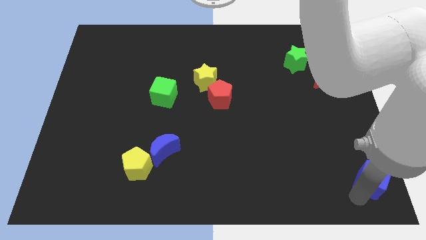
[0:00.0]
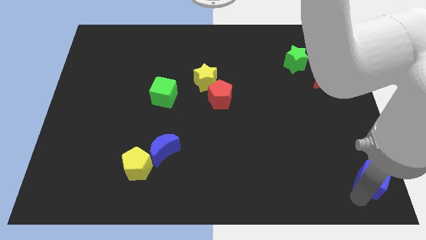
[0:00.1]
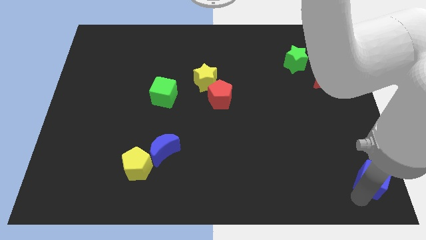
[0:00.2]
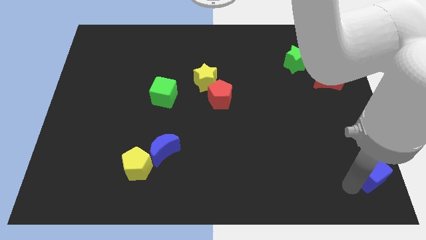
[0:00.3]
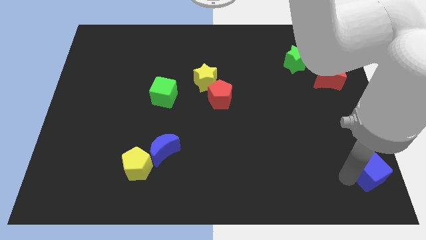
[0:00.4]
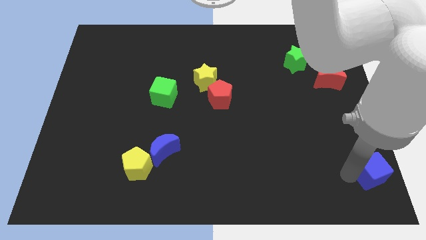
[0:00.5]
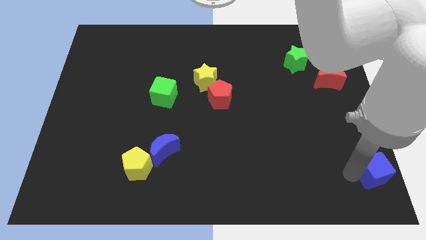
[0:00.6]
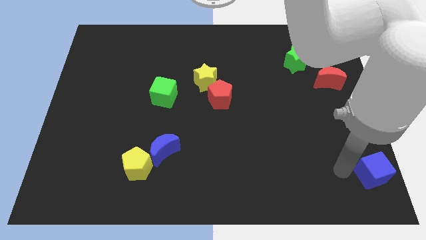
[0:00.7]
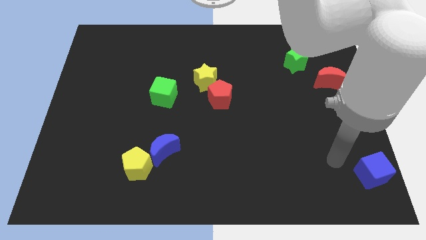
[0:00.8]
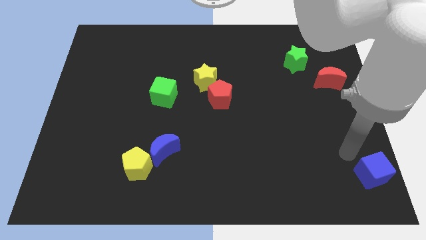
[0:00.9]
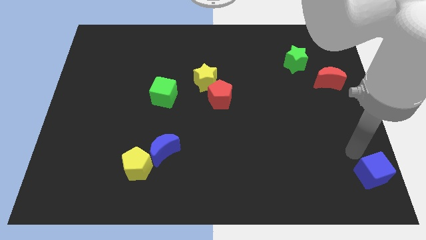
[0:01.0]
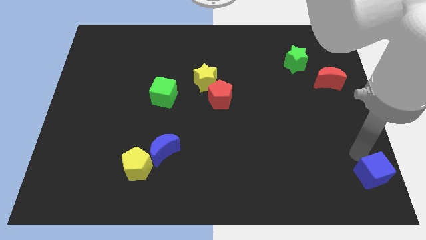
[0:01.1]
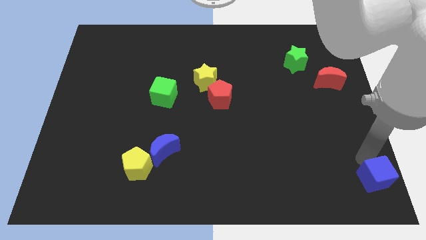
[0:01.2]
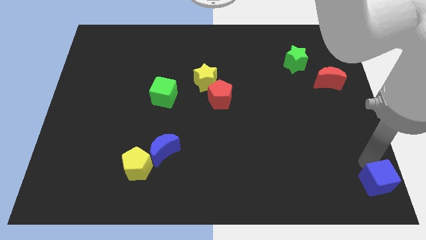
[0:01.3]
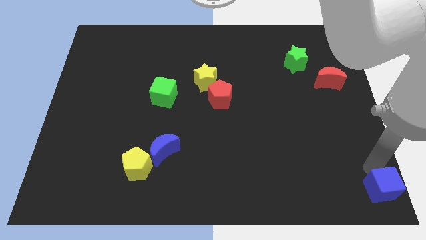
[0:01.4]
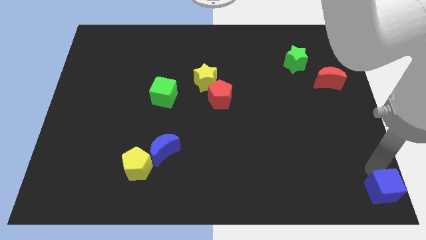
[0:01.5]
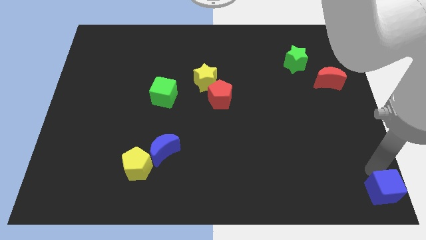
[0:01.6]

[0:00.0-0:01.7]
move the blue cube to the bottom right corner

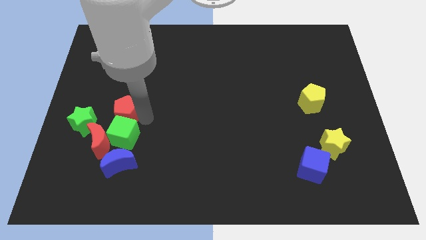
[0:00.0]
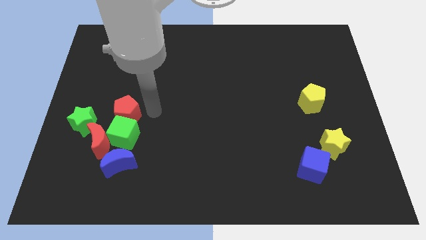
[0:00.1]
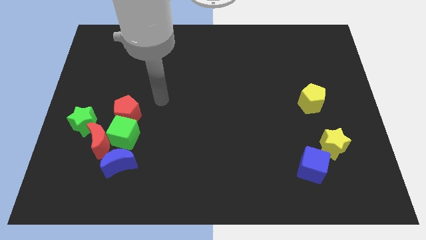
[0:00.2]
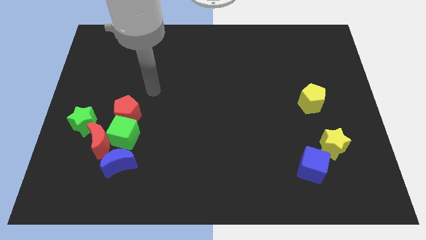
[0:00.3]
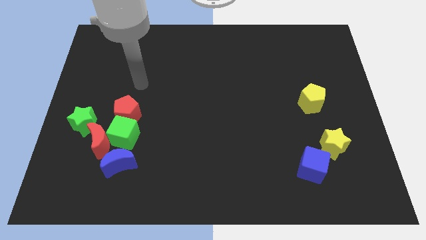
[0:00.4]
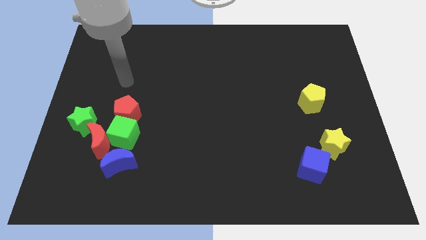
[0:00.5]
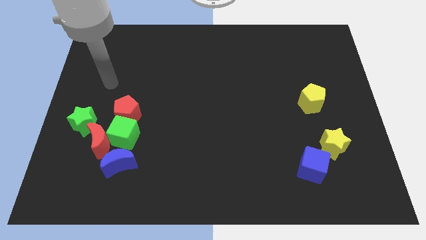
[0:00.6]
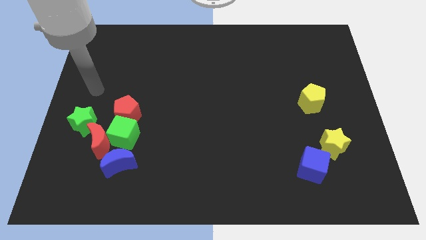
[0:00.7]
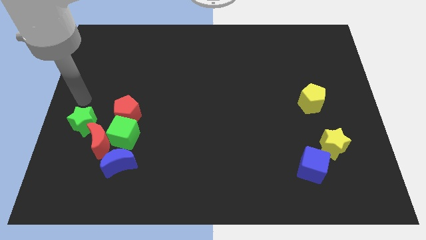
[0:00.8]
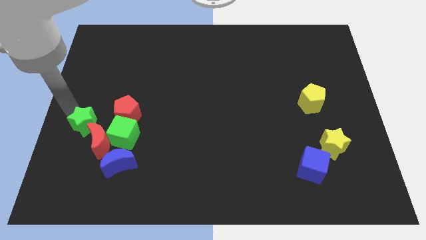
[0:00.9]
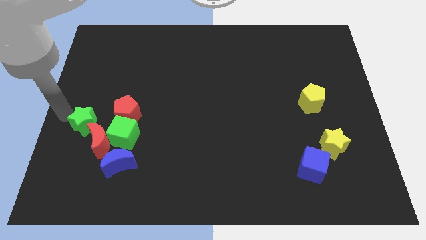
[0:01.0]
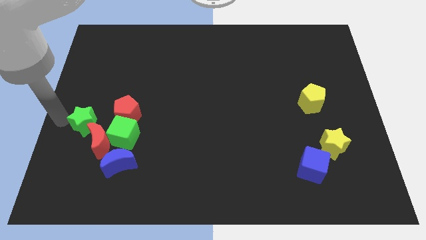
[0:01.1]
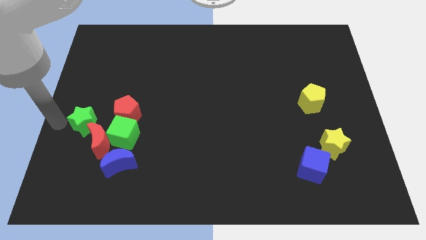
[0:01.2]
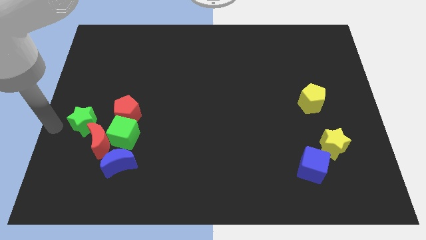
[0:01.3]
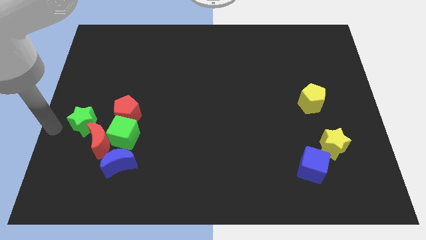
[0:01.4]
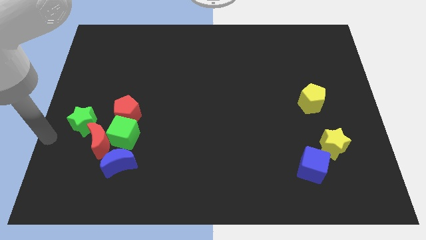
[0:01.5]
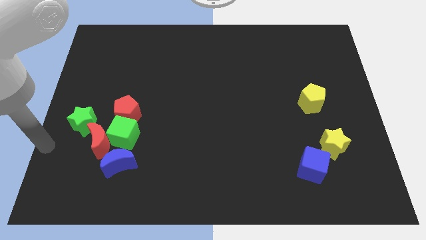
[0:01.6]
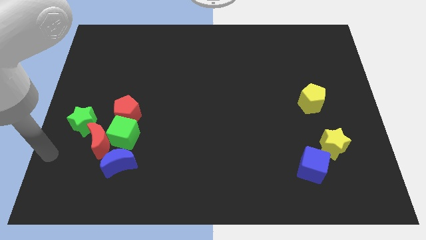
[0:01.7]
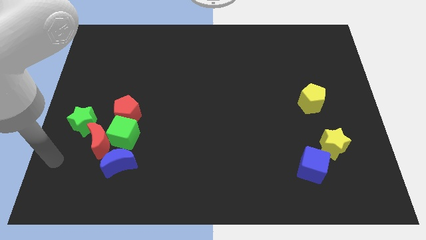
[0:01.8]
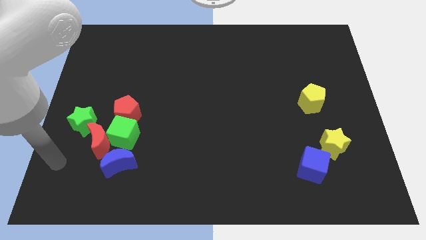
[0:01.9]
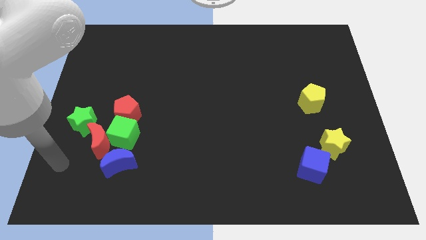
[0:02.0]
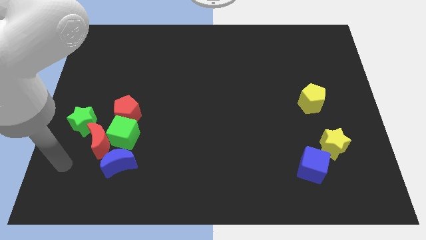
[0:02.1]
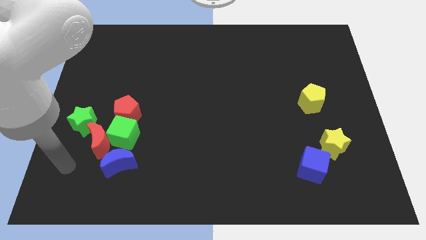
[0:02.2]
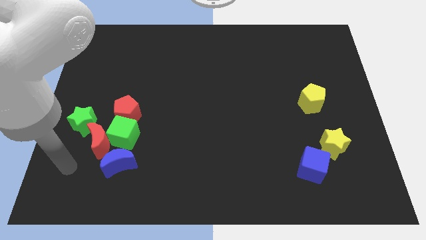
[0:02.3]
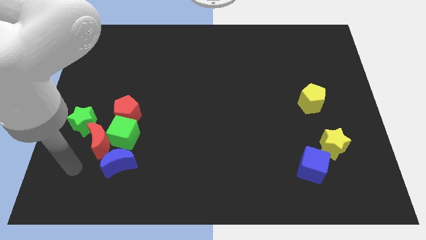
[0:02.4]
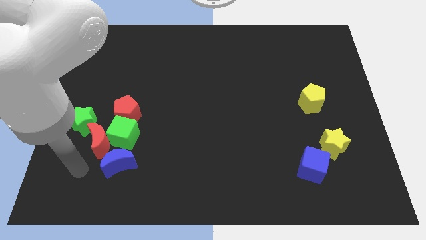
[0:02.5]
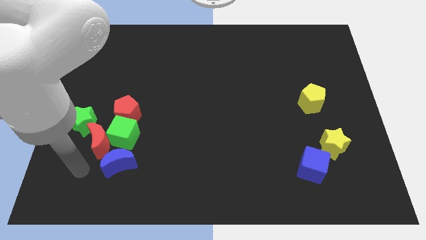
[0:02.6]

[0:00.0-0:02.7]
move your arm towards blue moon

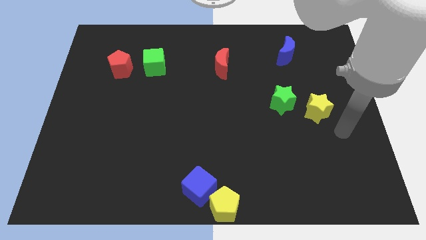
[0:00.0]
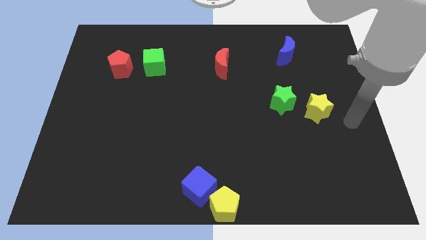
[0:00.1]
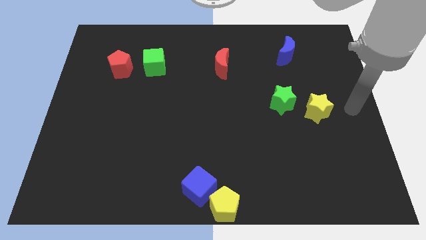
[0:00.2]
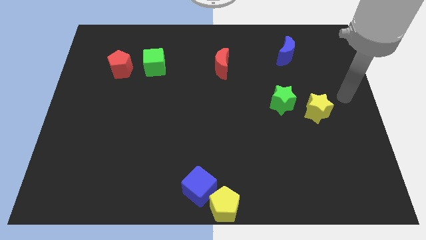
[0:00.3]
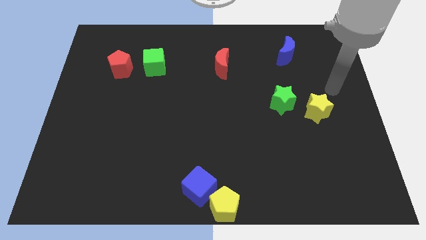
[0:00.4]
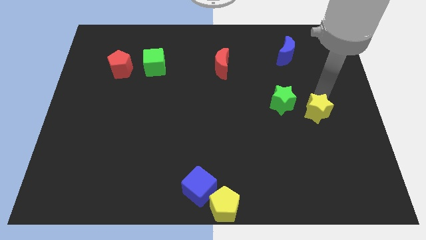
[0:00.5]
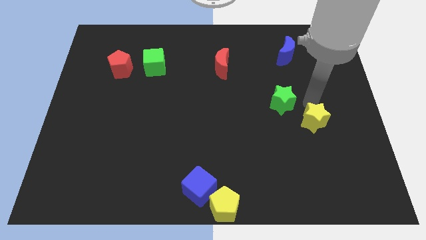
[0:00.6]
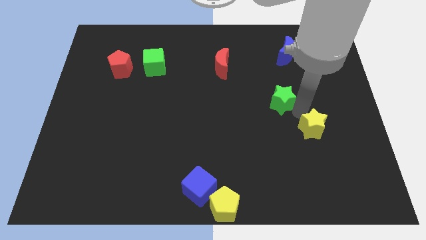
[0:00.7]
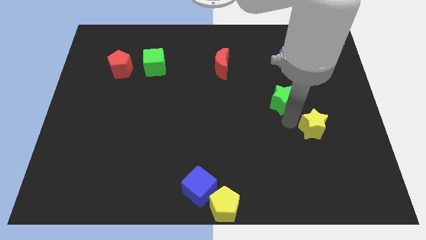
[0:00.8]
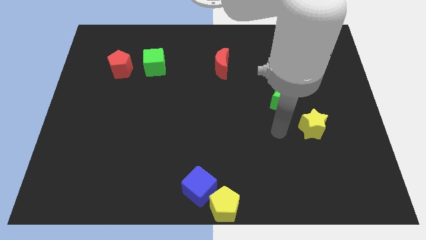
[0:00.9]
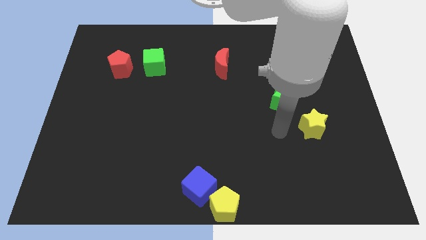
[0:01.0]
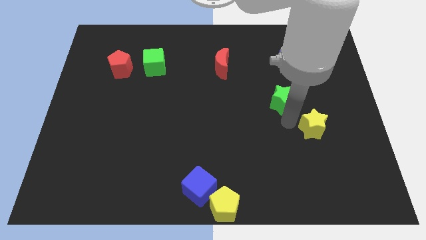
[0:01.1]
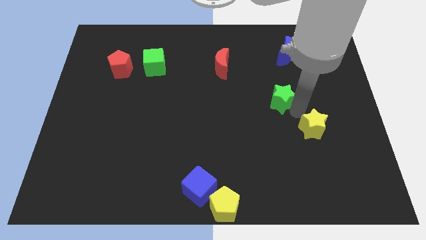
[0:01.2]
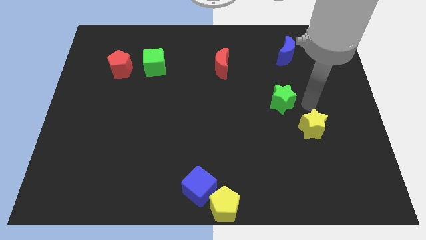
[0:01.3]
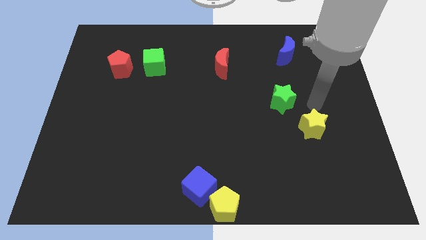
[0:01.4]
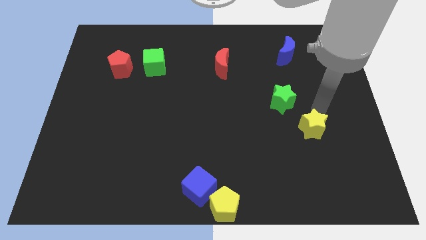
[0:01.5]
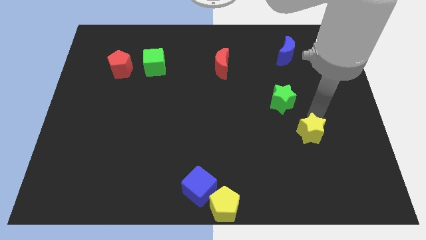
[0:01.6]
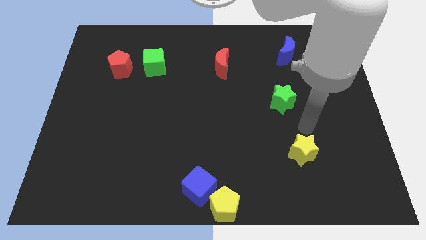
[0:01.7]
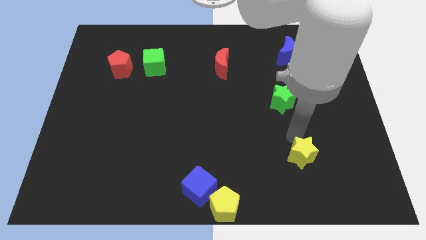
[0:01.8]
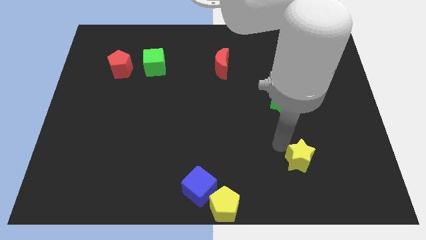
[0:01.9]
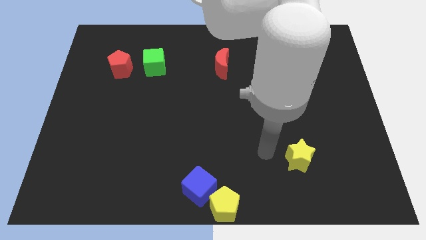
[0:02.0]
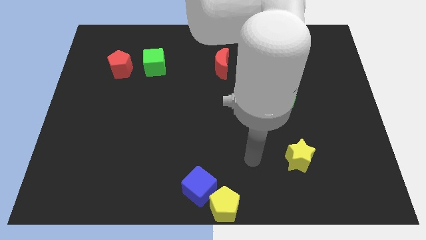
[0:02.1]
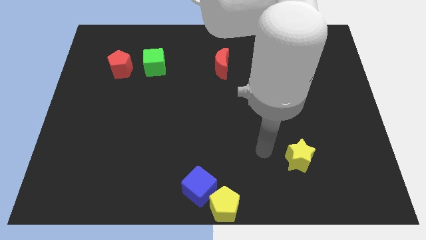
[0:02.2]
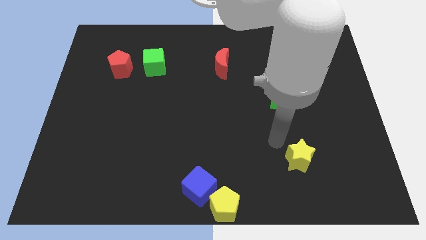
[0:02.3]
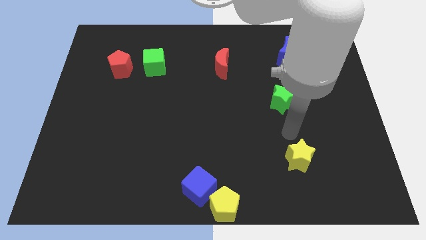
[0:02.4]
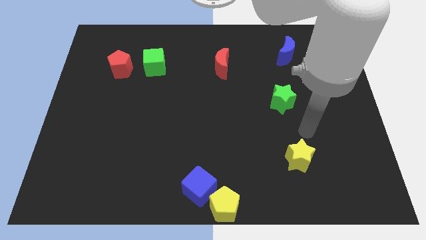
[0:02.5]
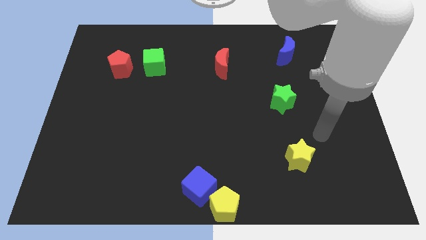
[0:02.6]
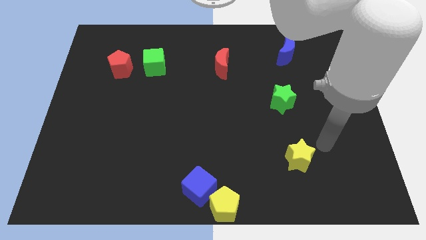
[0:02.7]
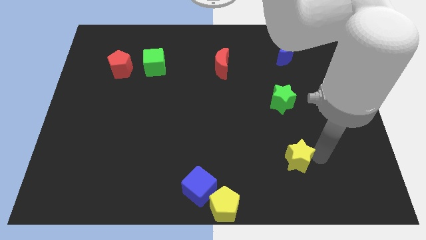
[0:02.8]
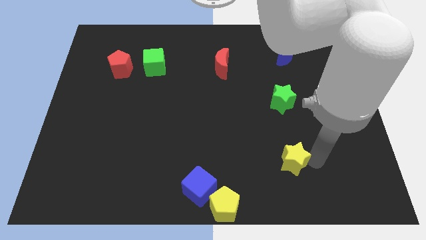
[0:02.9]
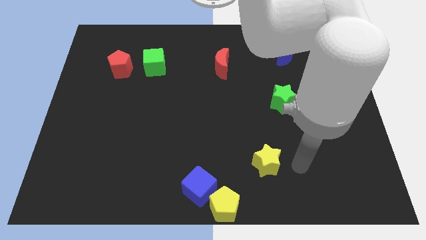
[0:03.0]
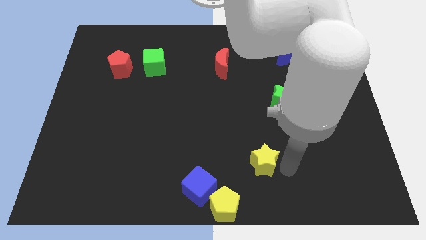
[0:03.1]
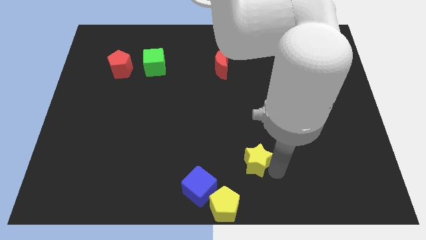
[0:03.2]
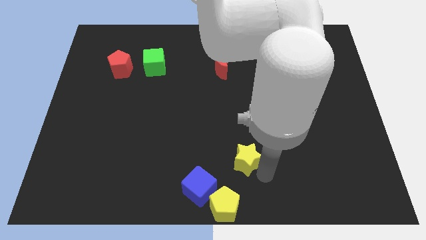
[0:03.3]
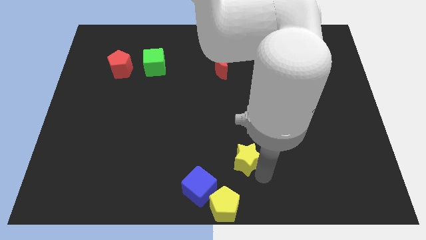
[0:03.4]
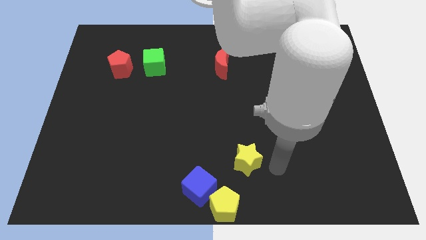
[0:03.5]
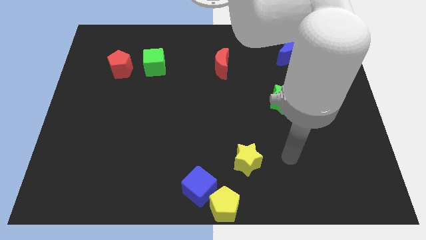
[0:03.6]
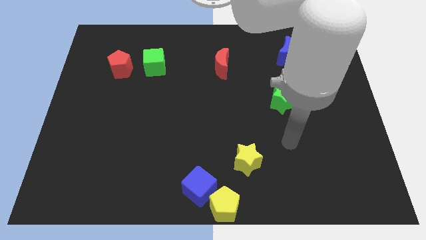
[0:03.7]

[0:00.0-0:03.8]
push the yellow star towards the bottom center

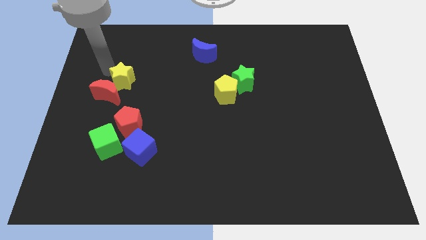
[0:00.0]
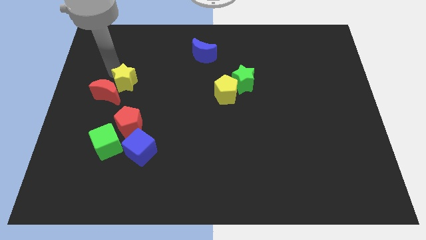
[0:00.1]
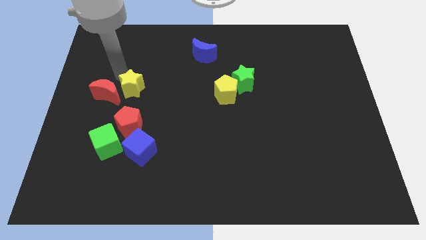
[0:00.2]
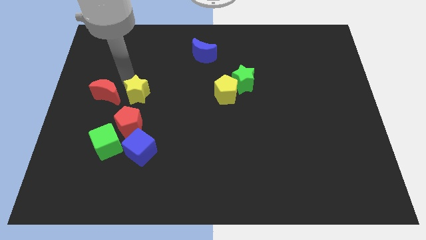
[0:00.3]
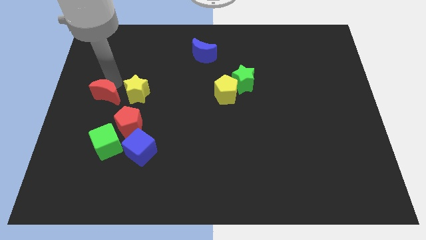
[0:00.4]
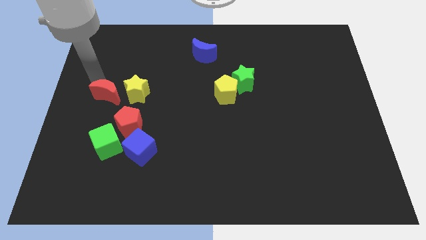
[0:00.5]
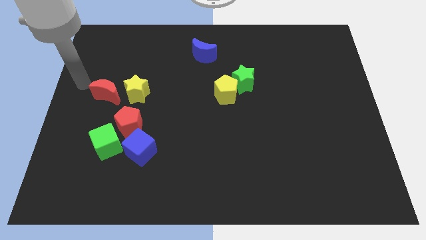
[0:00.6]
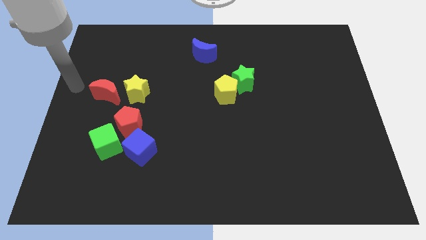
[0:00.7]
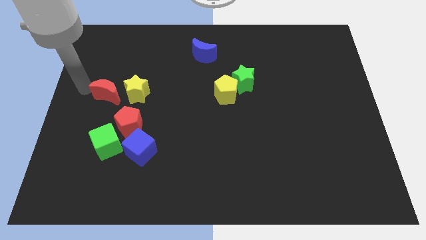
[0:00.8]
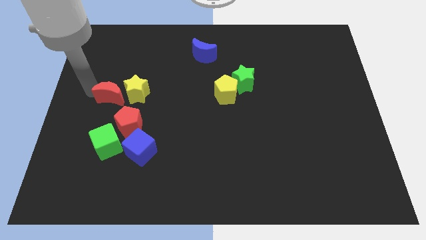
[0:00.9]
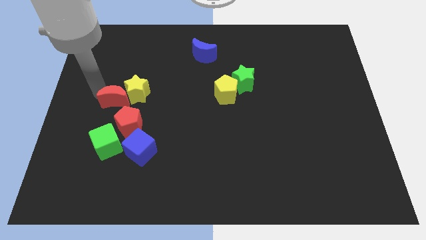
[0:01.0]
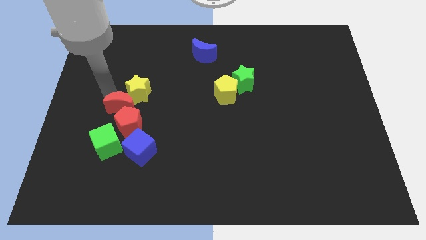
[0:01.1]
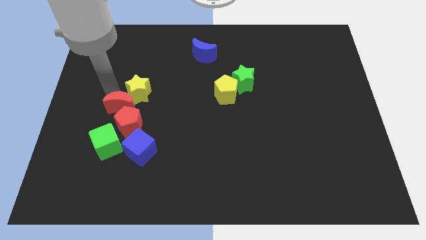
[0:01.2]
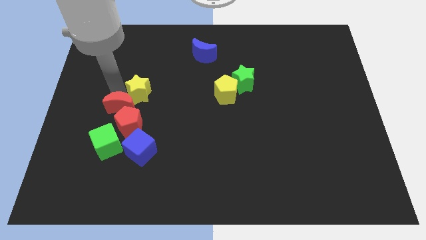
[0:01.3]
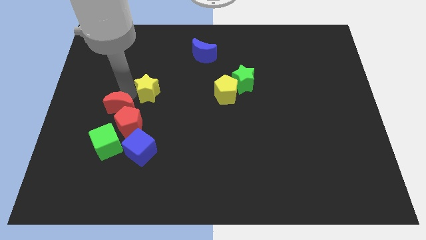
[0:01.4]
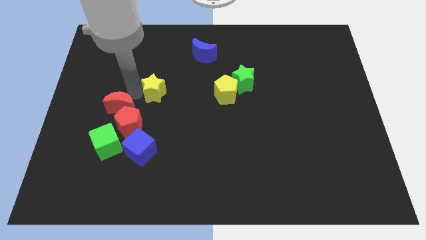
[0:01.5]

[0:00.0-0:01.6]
separate the yellow star from the red moon
